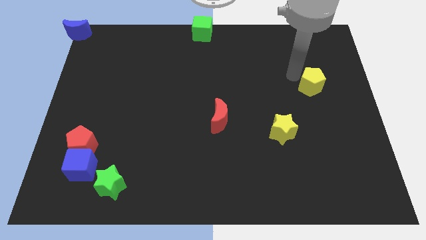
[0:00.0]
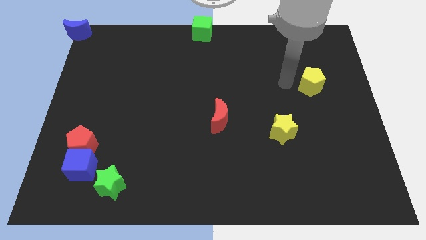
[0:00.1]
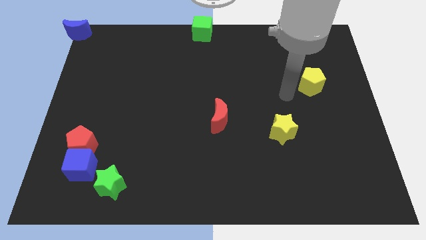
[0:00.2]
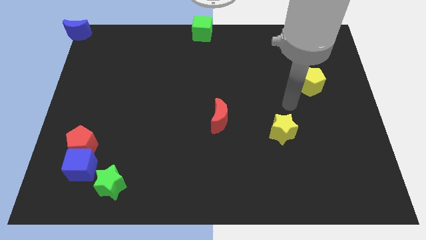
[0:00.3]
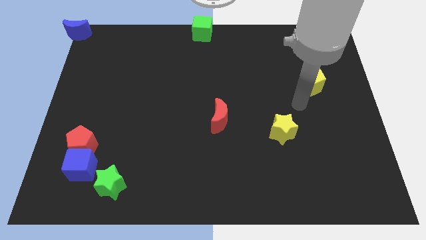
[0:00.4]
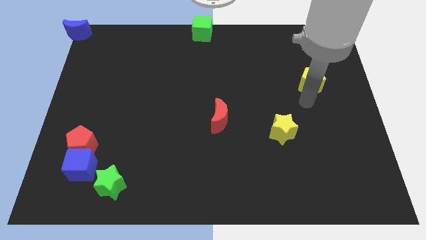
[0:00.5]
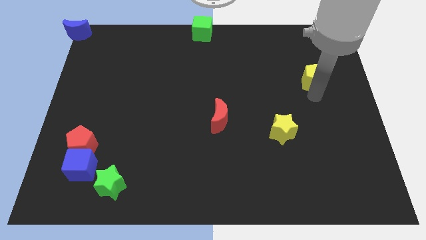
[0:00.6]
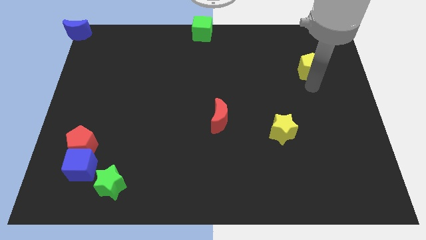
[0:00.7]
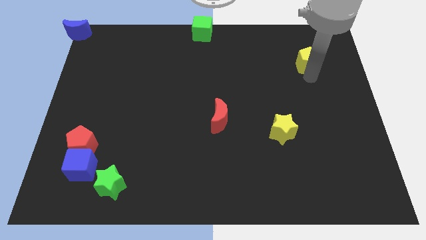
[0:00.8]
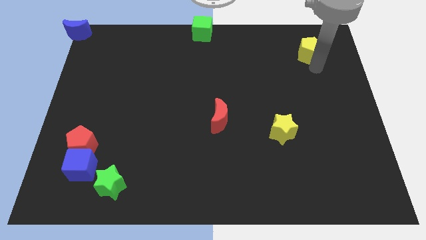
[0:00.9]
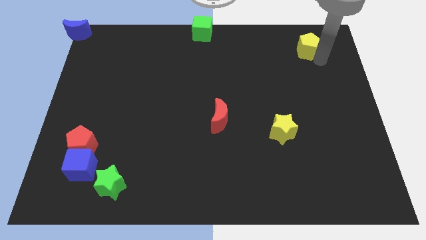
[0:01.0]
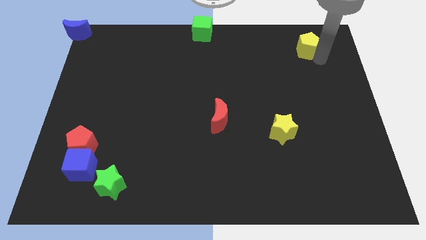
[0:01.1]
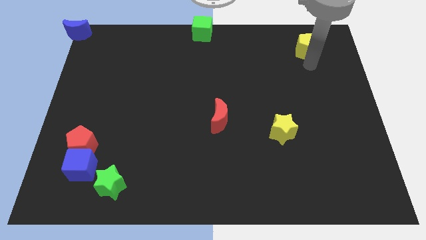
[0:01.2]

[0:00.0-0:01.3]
push the yellow pentagon towards the right top of the board

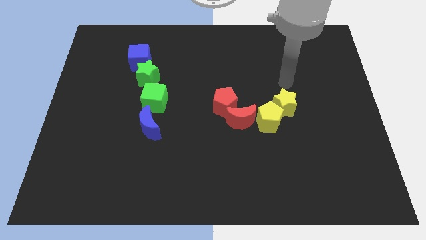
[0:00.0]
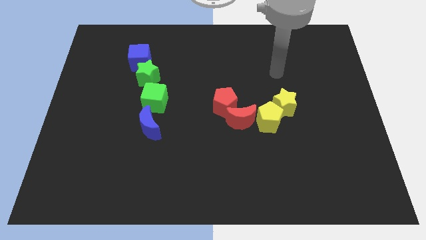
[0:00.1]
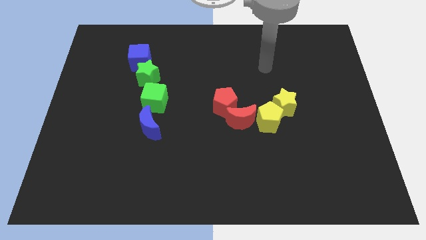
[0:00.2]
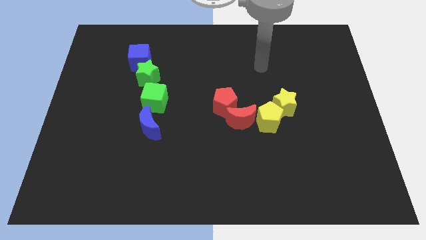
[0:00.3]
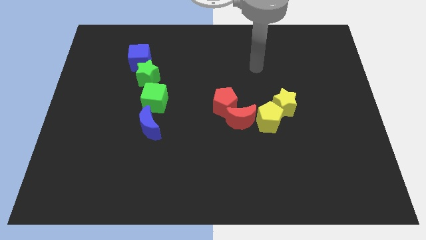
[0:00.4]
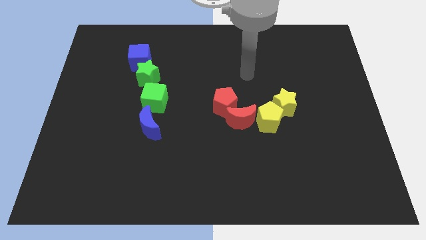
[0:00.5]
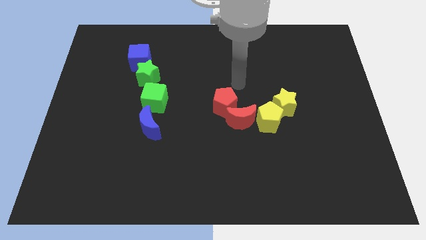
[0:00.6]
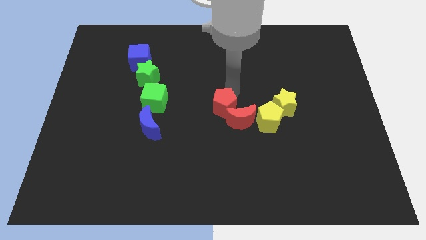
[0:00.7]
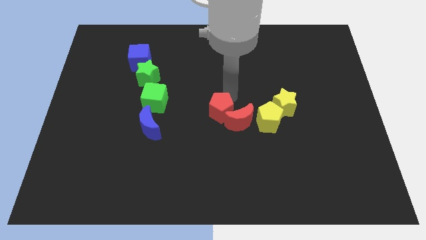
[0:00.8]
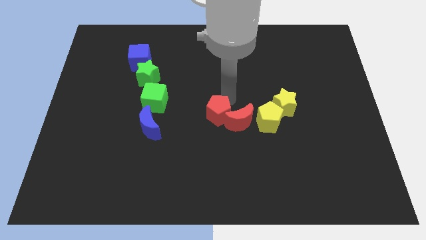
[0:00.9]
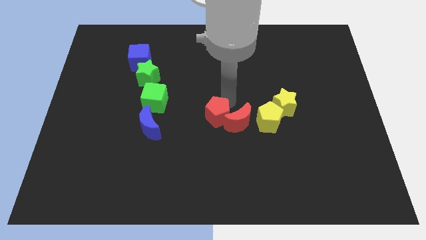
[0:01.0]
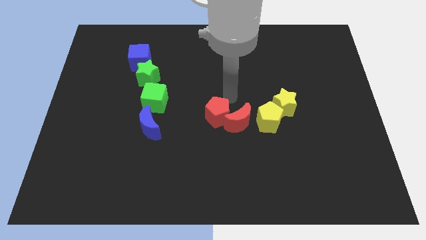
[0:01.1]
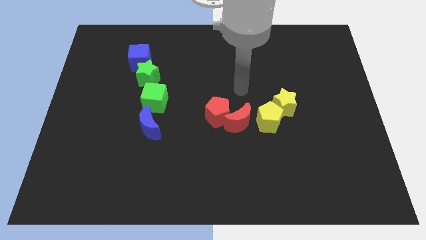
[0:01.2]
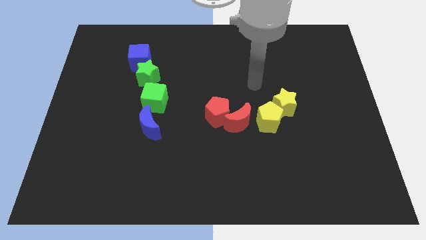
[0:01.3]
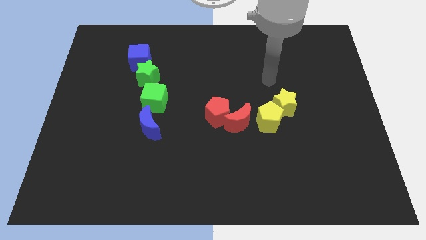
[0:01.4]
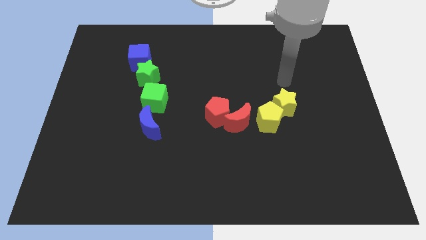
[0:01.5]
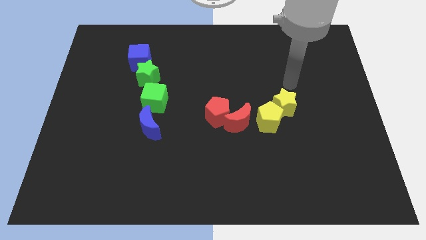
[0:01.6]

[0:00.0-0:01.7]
slightly push the red pentagon into the red moon

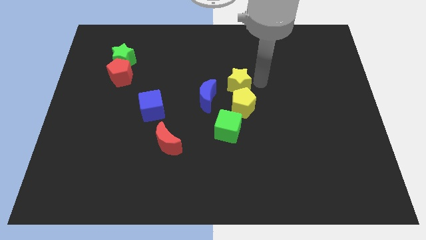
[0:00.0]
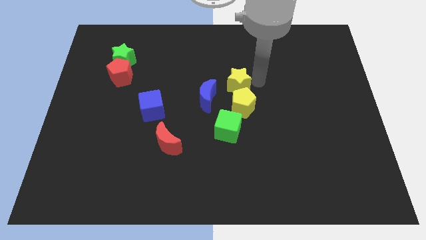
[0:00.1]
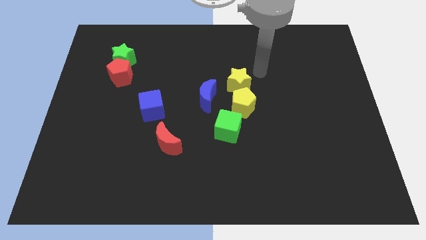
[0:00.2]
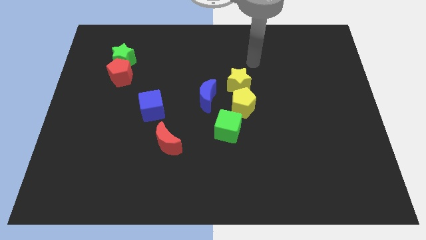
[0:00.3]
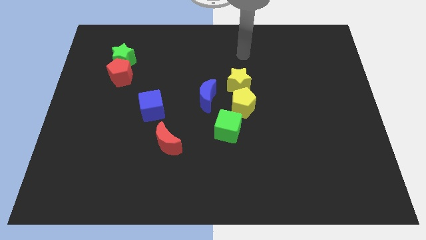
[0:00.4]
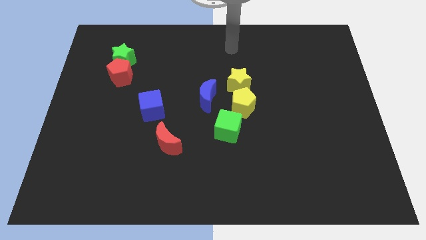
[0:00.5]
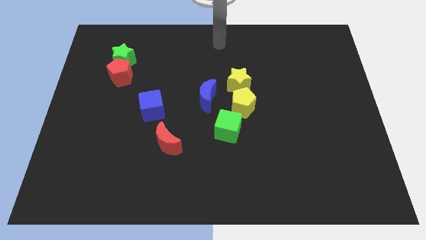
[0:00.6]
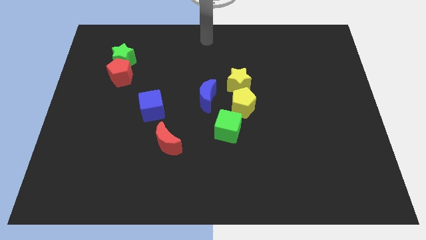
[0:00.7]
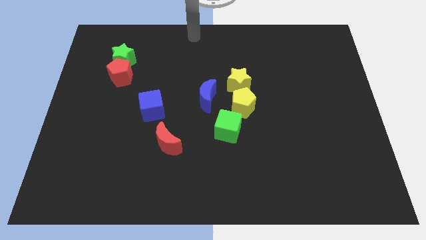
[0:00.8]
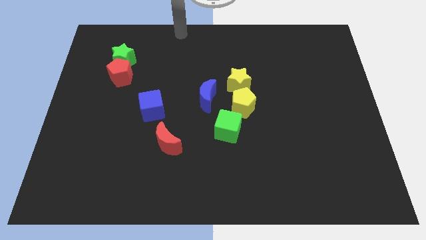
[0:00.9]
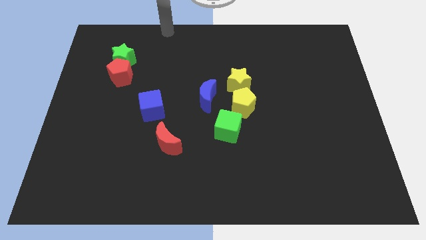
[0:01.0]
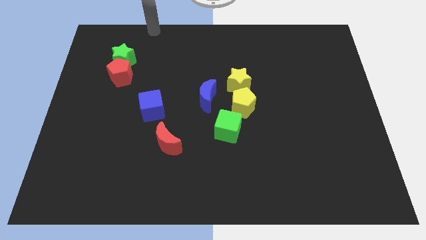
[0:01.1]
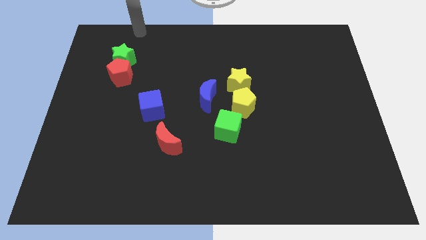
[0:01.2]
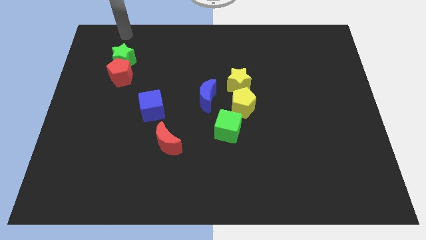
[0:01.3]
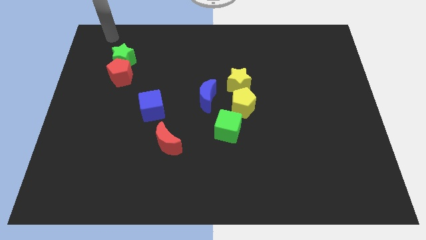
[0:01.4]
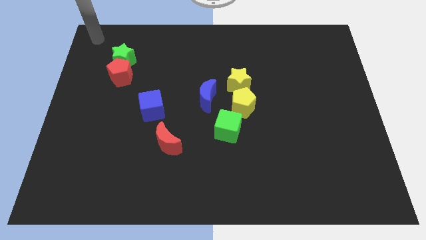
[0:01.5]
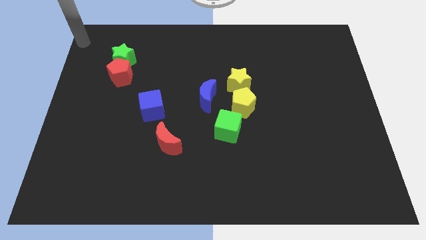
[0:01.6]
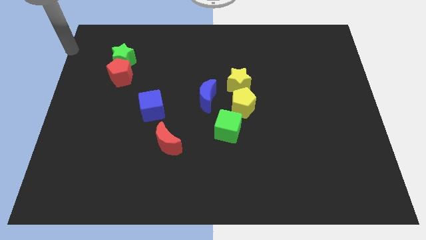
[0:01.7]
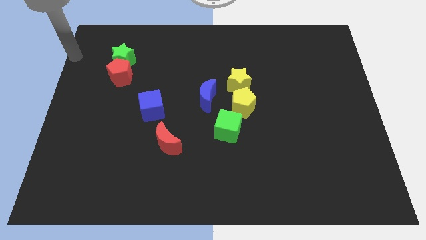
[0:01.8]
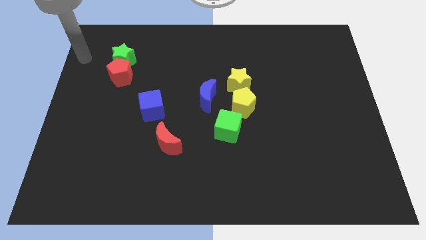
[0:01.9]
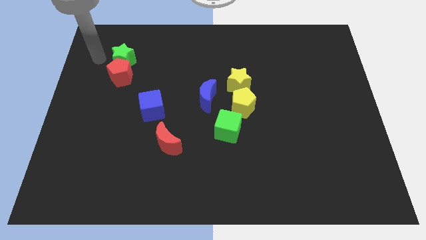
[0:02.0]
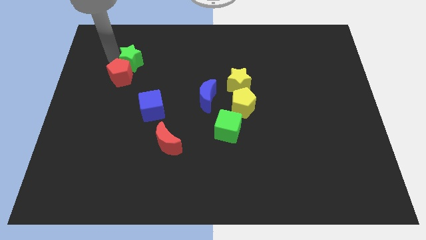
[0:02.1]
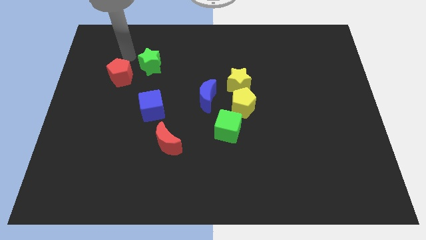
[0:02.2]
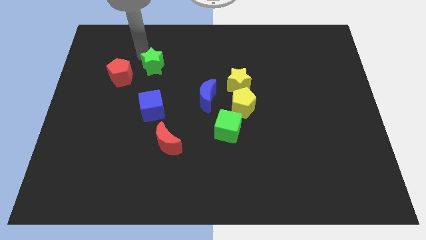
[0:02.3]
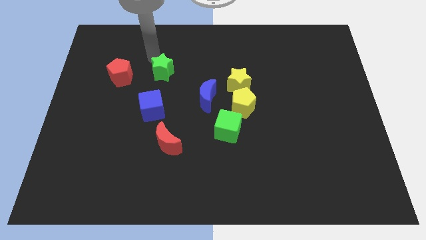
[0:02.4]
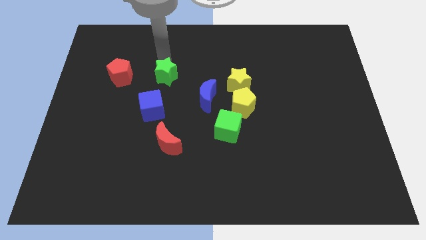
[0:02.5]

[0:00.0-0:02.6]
move the green star diagonal to the right of the red pentagon

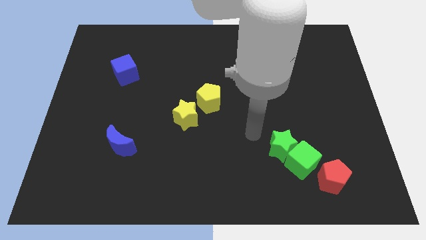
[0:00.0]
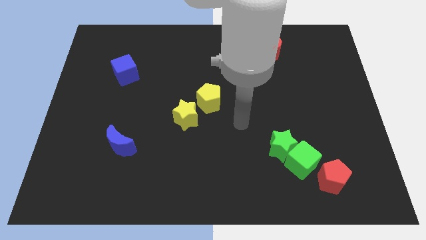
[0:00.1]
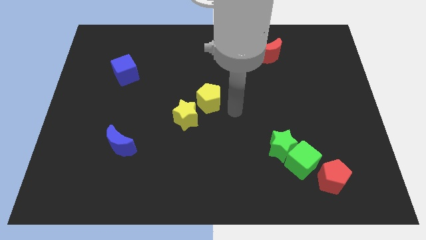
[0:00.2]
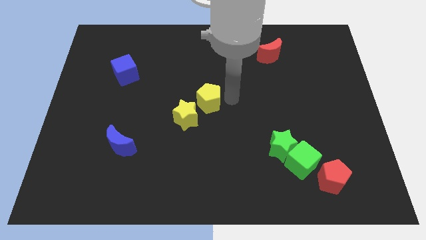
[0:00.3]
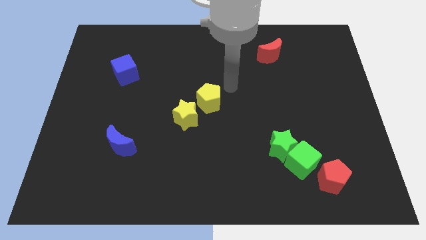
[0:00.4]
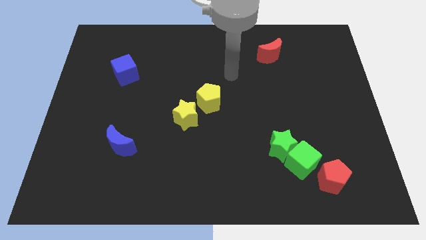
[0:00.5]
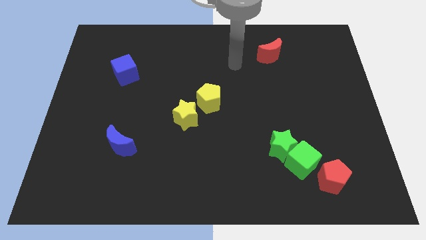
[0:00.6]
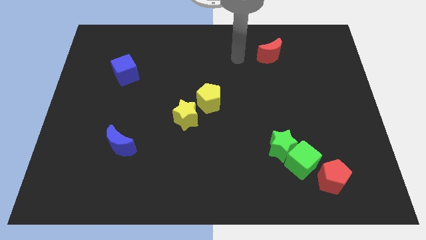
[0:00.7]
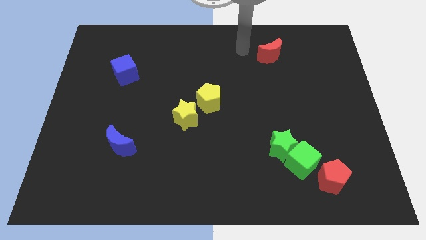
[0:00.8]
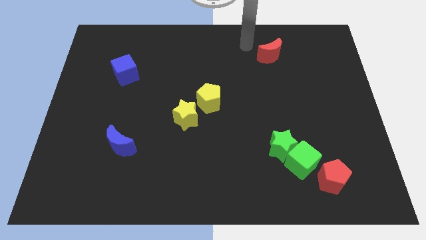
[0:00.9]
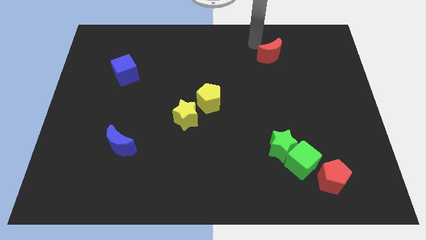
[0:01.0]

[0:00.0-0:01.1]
move your arm to the top of the red crescent

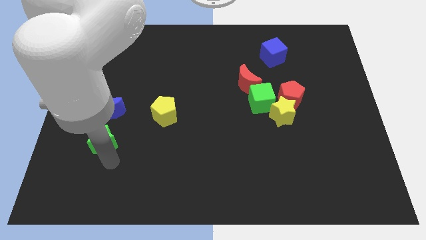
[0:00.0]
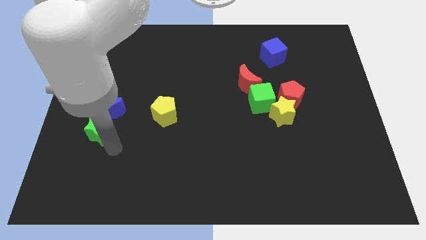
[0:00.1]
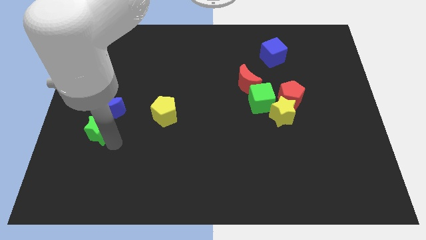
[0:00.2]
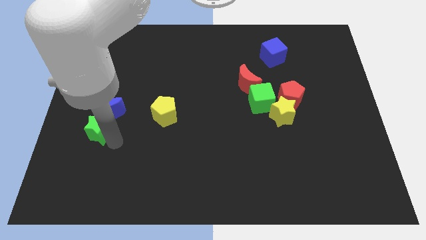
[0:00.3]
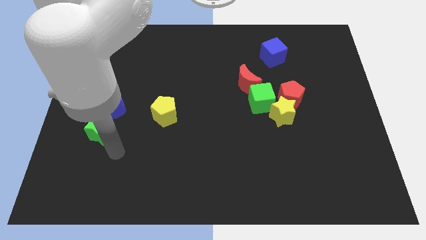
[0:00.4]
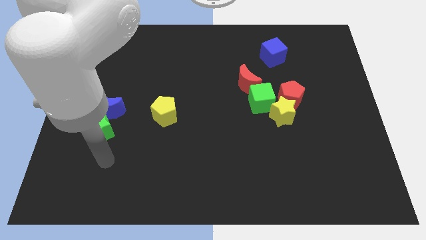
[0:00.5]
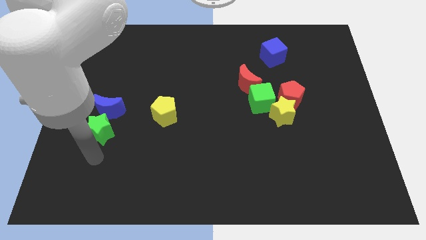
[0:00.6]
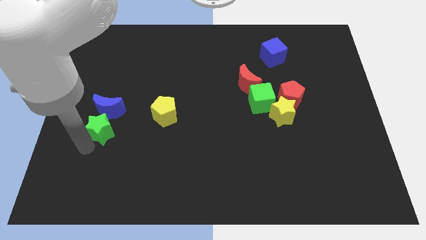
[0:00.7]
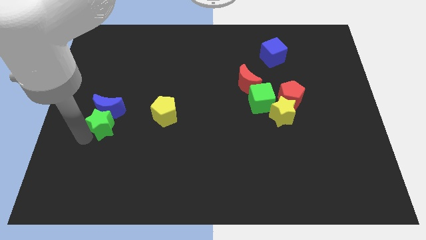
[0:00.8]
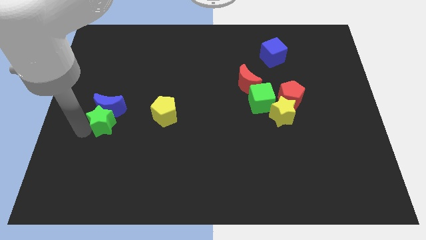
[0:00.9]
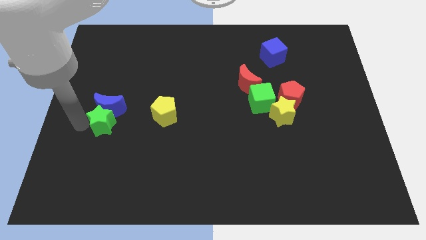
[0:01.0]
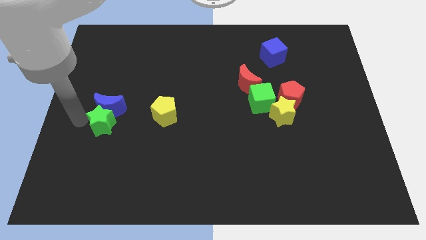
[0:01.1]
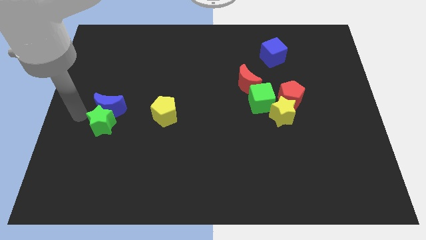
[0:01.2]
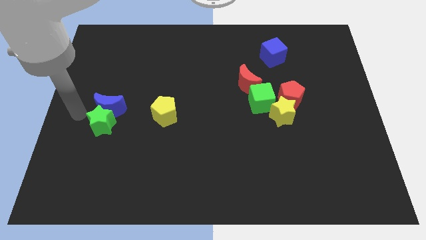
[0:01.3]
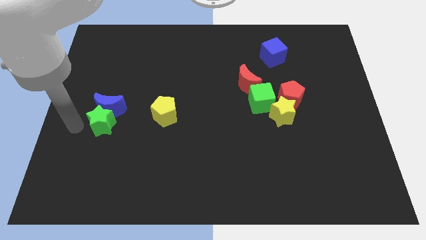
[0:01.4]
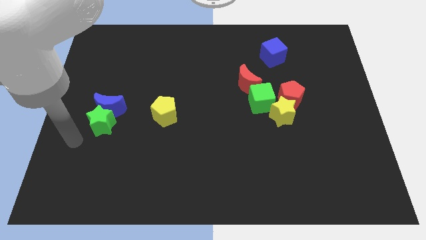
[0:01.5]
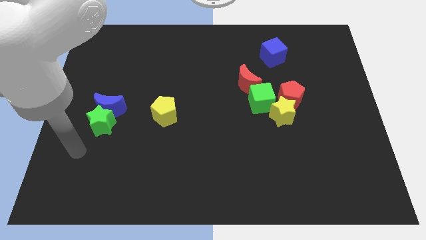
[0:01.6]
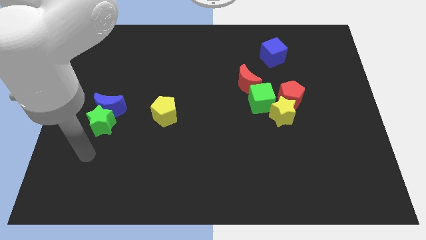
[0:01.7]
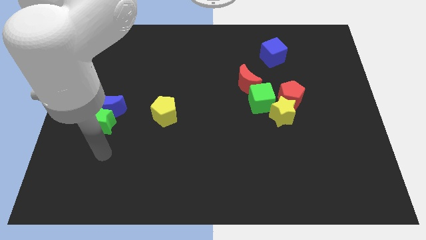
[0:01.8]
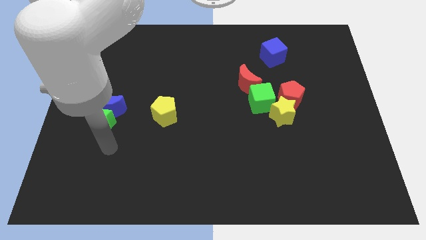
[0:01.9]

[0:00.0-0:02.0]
push green star into the blue moon
